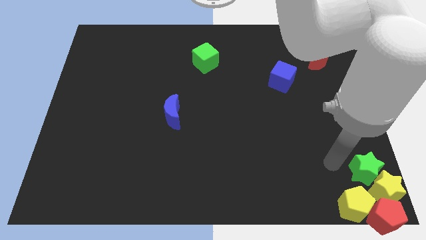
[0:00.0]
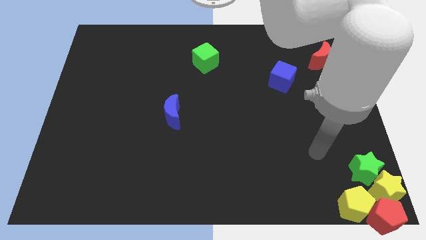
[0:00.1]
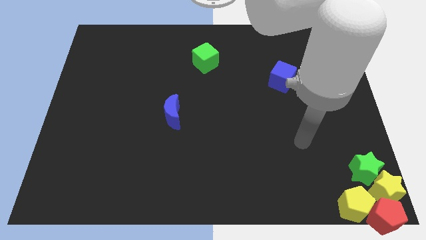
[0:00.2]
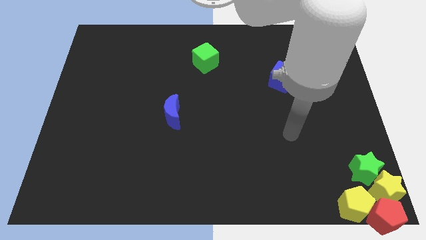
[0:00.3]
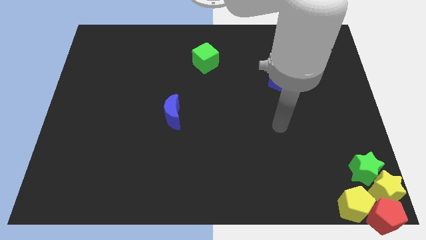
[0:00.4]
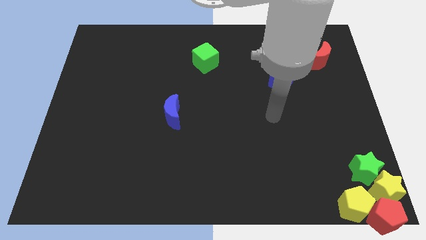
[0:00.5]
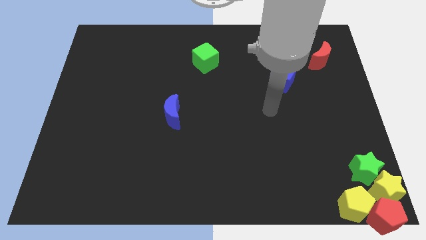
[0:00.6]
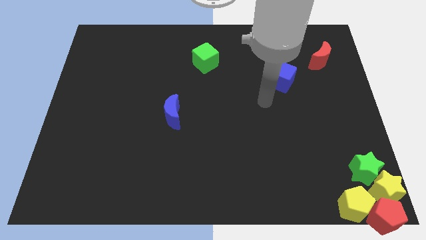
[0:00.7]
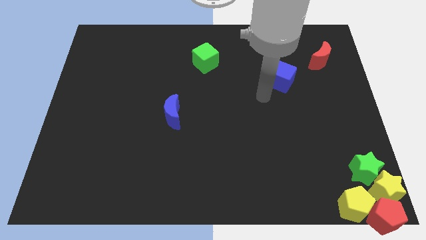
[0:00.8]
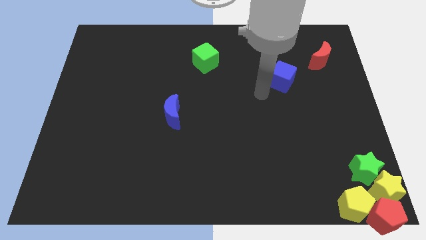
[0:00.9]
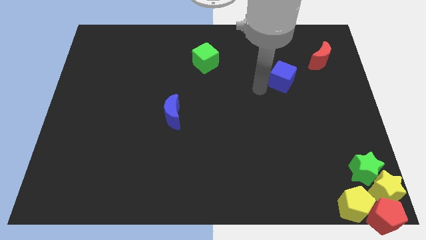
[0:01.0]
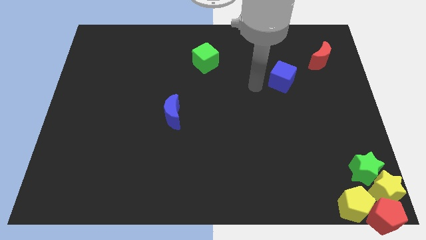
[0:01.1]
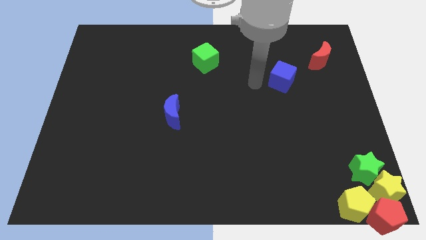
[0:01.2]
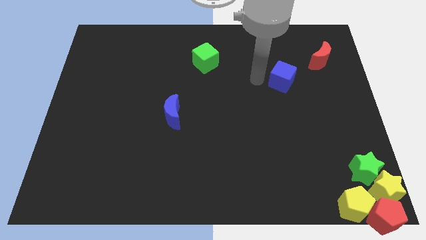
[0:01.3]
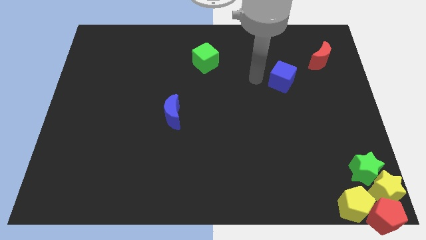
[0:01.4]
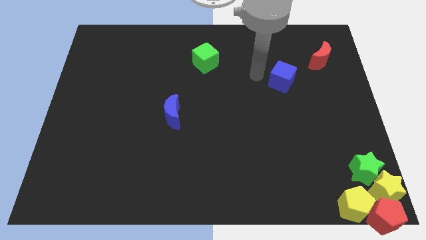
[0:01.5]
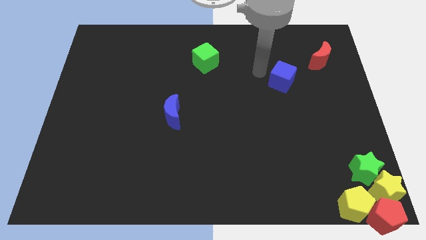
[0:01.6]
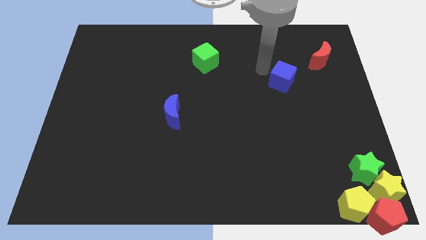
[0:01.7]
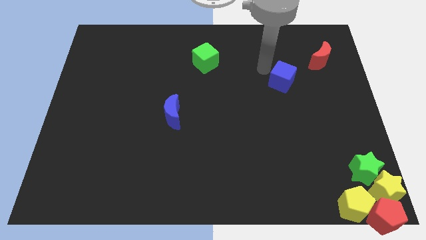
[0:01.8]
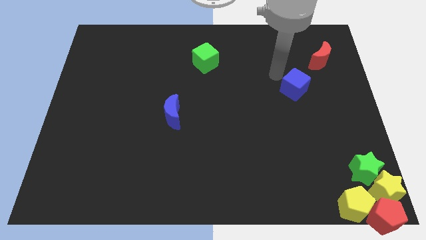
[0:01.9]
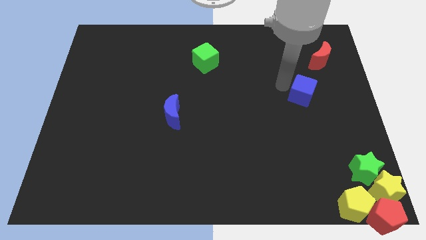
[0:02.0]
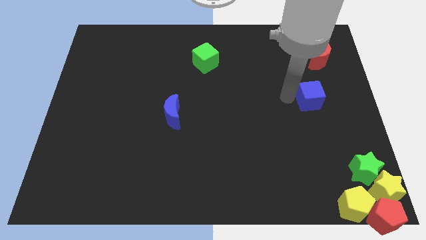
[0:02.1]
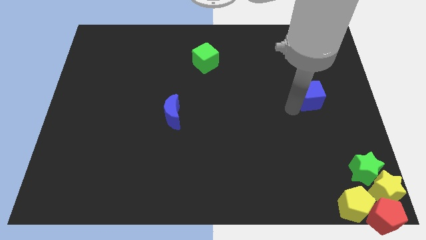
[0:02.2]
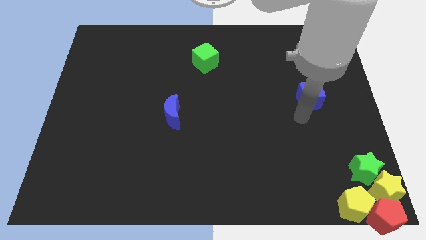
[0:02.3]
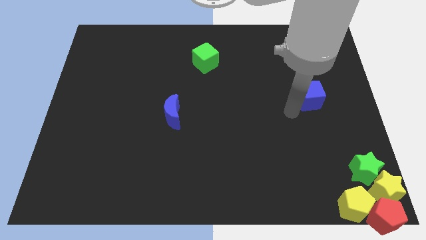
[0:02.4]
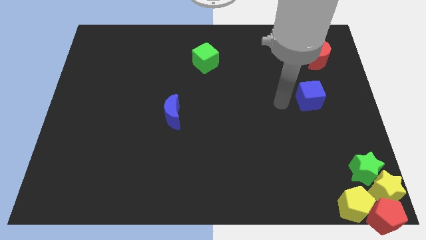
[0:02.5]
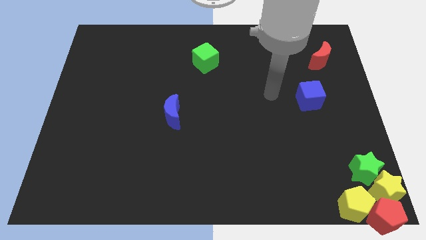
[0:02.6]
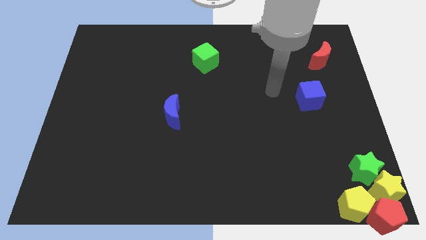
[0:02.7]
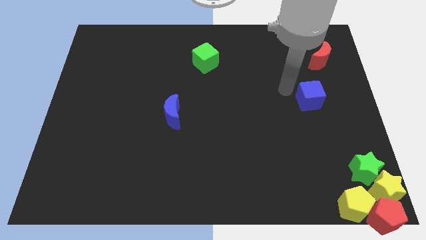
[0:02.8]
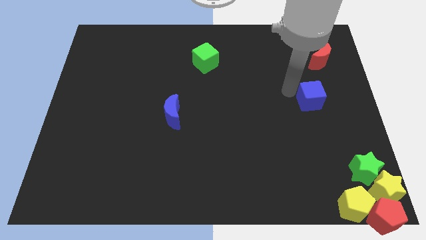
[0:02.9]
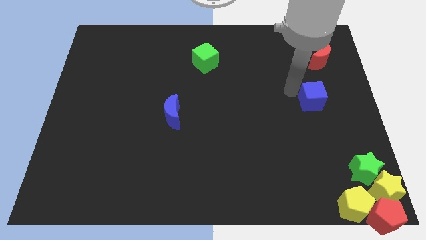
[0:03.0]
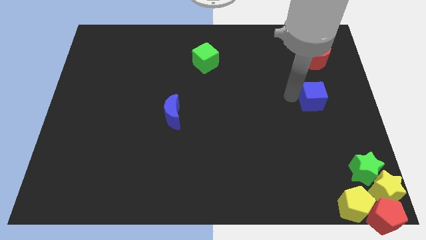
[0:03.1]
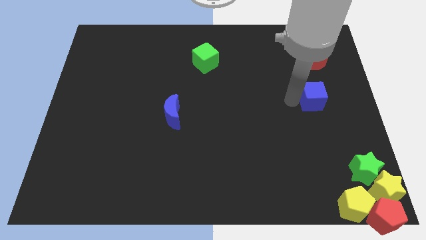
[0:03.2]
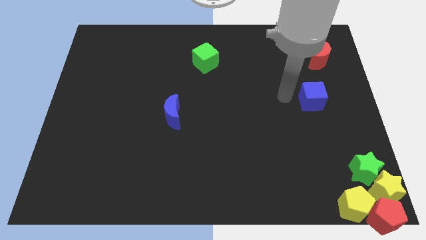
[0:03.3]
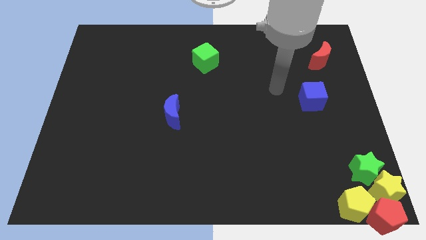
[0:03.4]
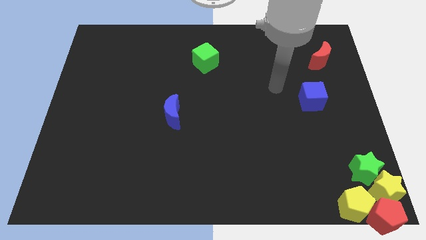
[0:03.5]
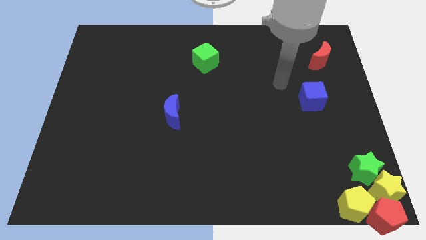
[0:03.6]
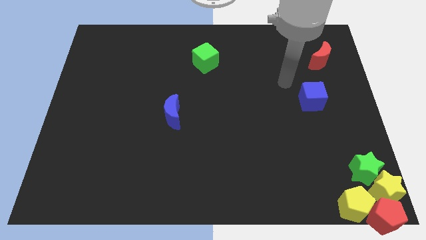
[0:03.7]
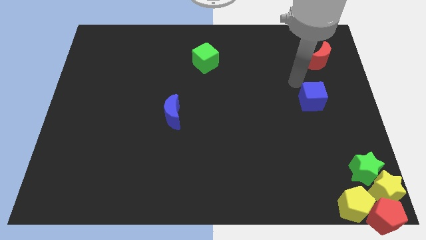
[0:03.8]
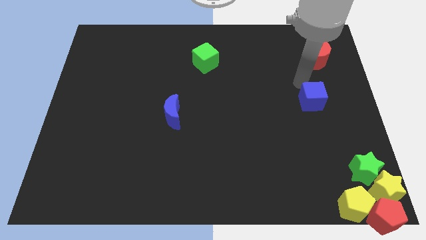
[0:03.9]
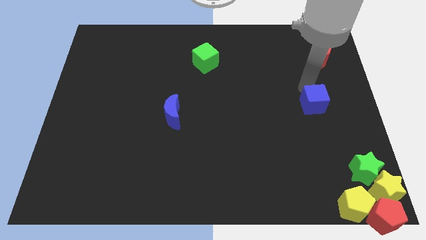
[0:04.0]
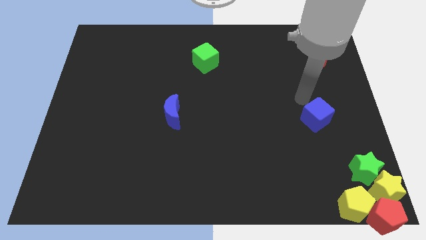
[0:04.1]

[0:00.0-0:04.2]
place the blue cube right to the blue moon

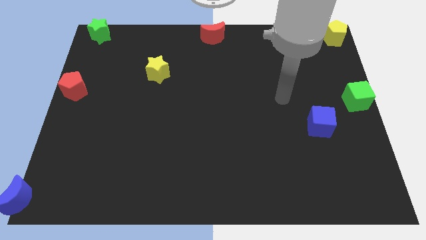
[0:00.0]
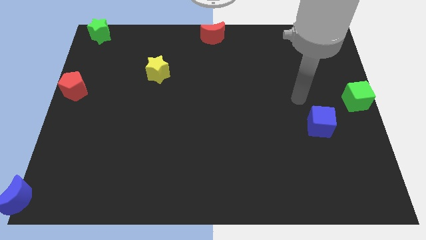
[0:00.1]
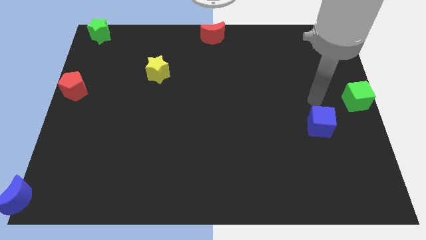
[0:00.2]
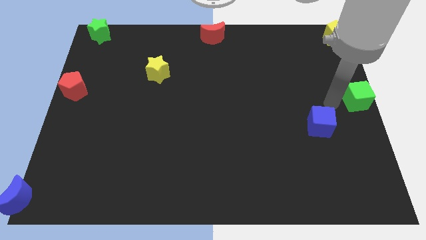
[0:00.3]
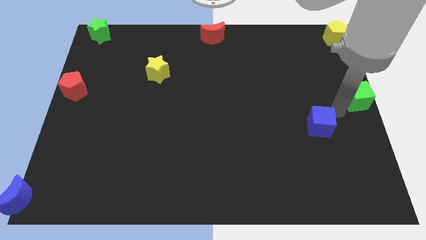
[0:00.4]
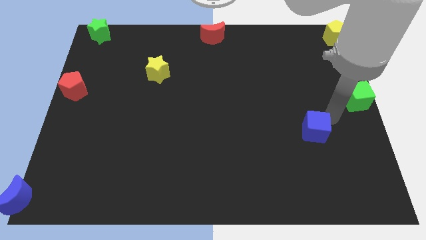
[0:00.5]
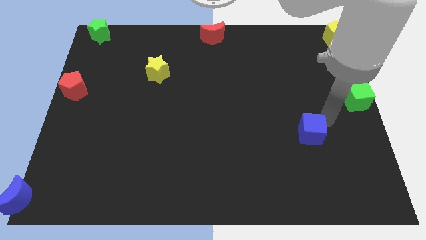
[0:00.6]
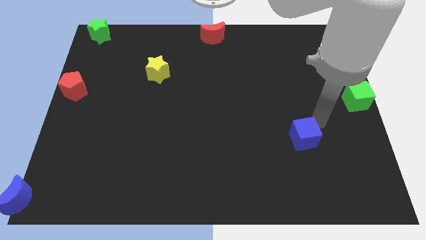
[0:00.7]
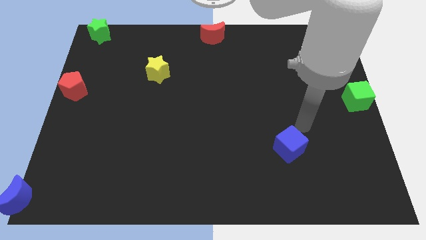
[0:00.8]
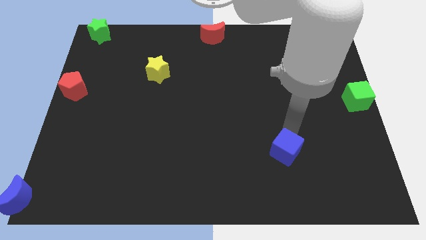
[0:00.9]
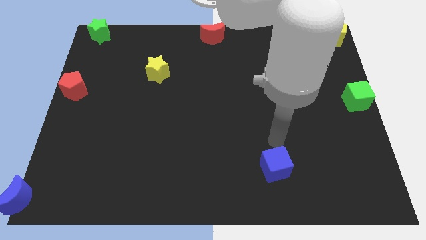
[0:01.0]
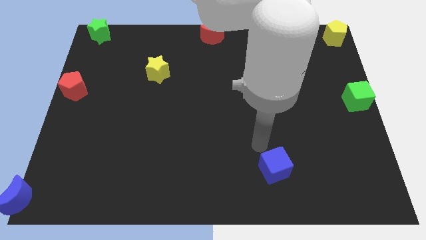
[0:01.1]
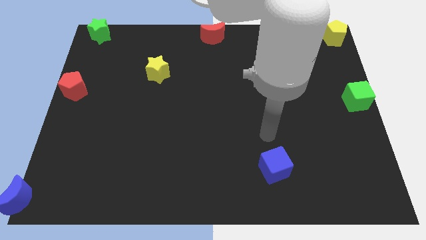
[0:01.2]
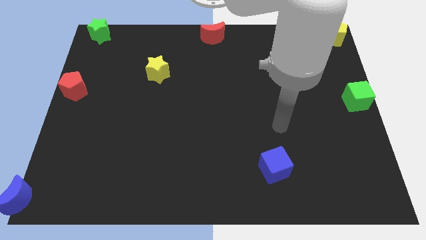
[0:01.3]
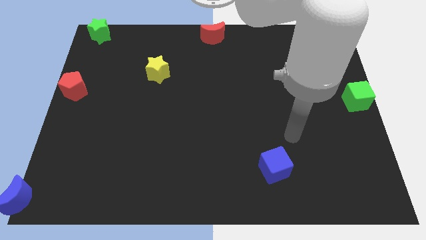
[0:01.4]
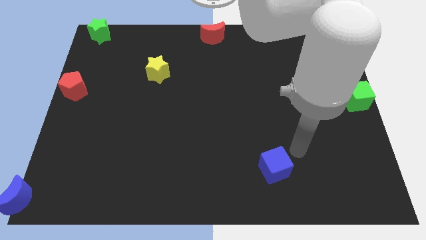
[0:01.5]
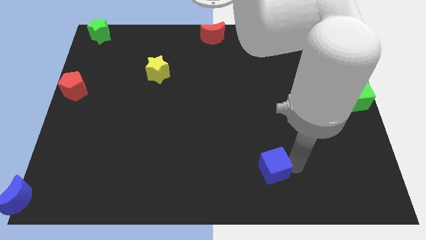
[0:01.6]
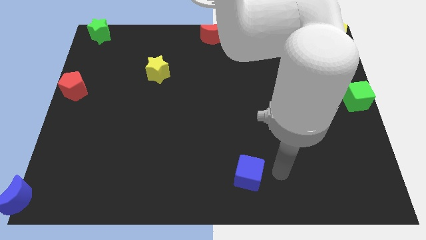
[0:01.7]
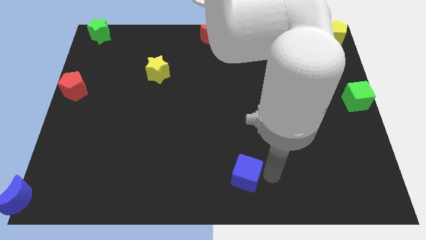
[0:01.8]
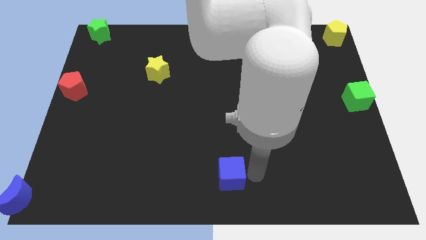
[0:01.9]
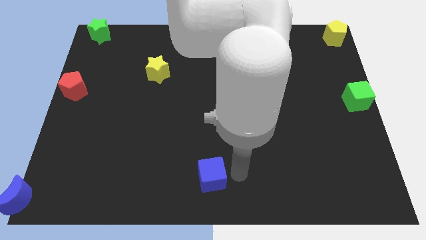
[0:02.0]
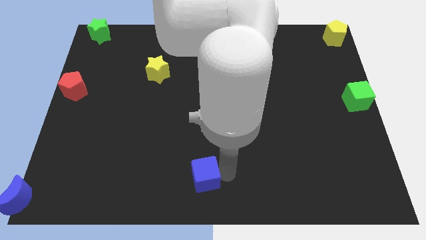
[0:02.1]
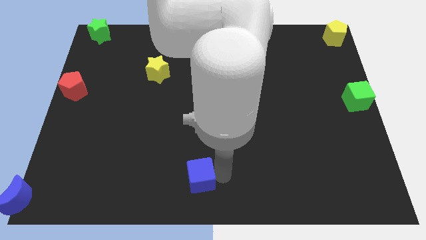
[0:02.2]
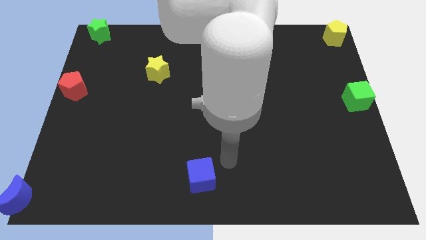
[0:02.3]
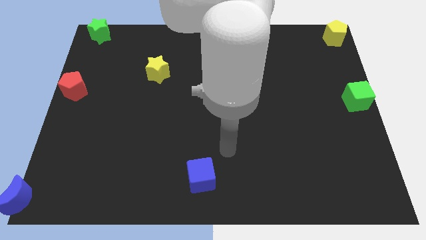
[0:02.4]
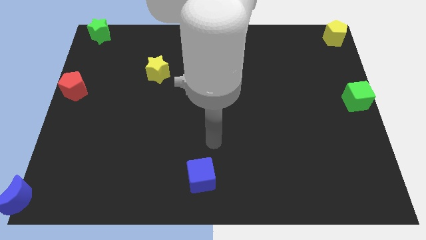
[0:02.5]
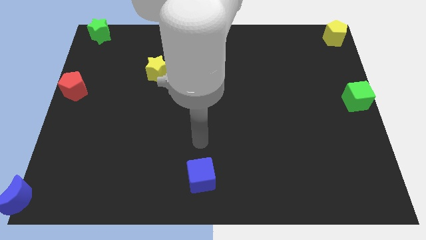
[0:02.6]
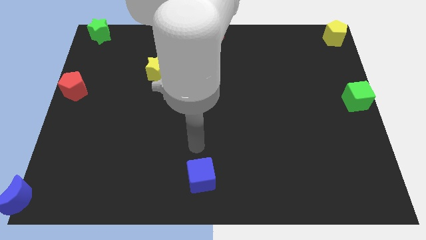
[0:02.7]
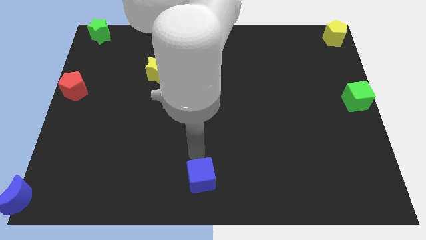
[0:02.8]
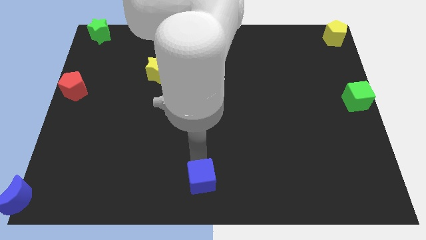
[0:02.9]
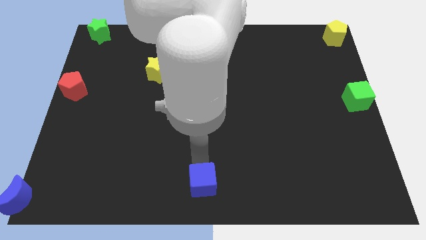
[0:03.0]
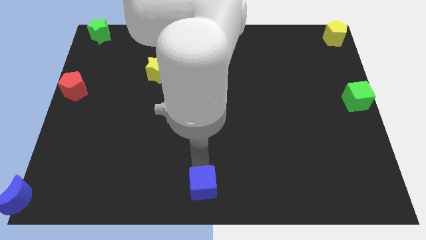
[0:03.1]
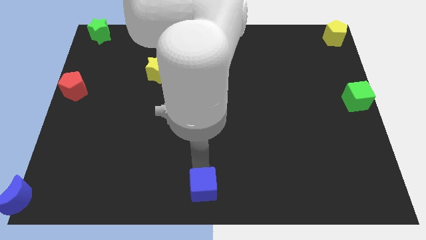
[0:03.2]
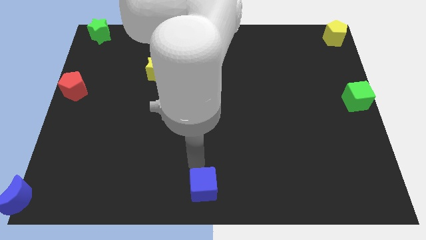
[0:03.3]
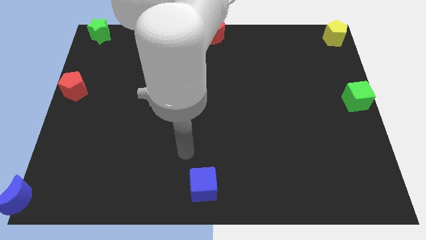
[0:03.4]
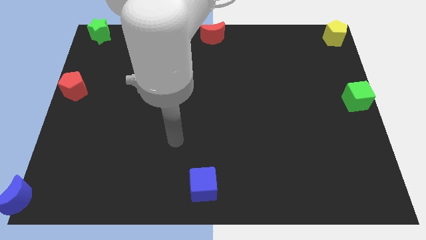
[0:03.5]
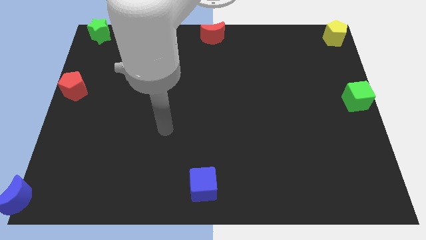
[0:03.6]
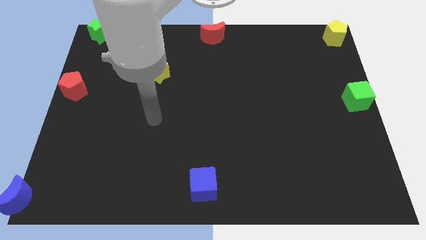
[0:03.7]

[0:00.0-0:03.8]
place the blue cube at the bottom center of the board

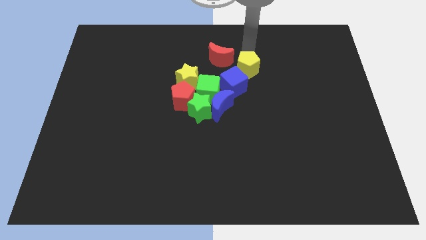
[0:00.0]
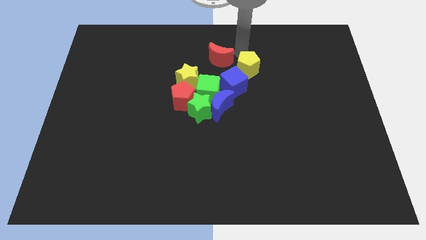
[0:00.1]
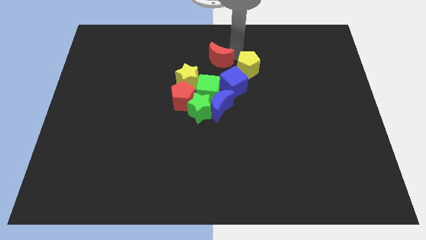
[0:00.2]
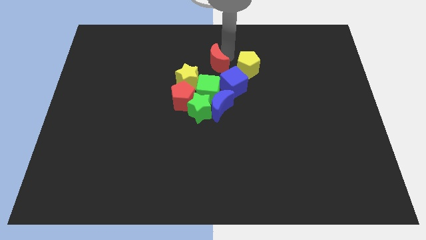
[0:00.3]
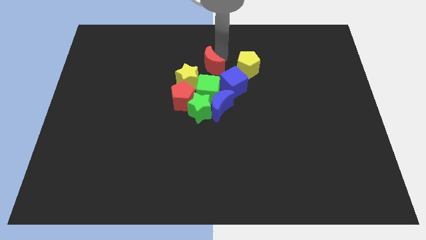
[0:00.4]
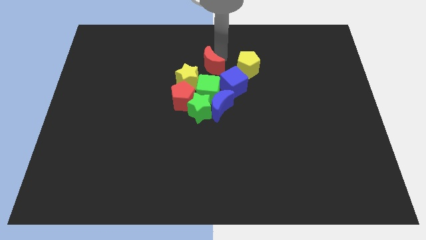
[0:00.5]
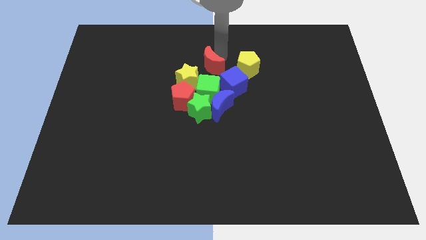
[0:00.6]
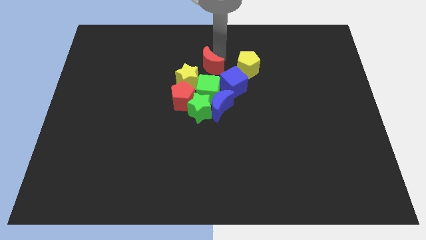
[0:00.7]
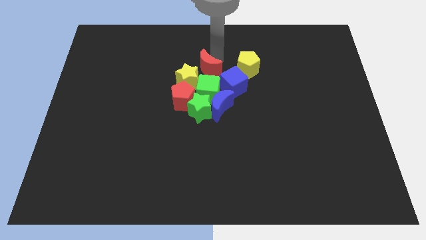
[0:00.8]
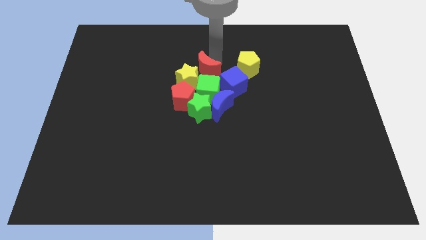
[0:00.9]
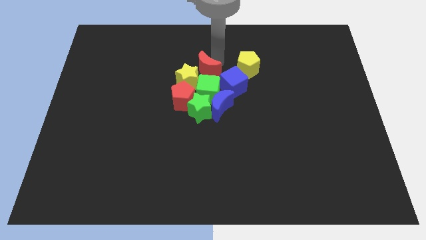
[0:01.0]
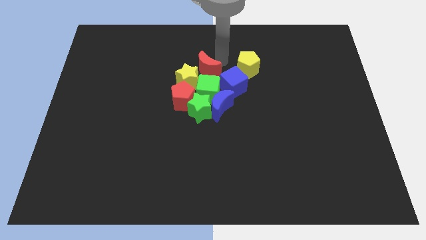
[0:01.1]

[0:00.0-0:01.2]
push the red moon above to the green cube
